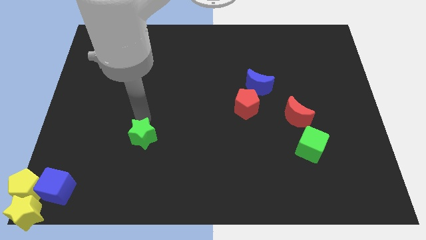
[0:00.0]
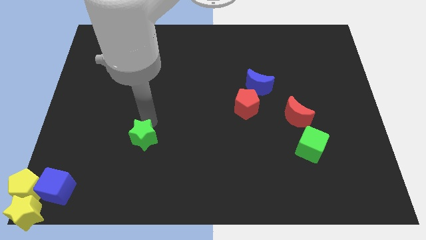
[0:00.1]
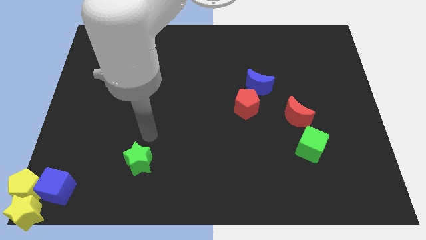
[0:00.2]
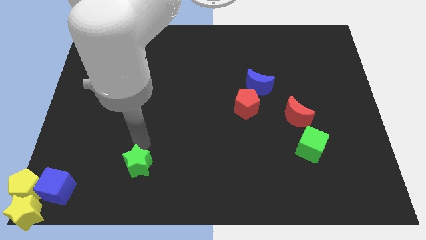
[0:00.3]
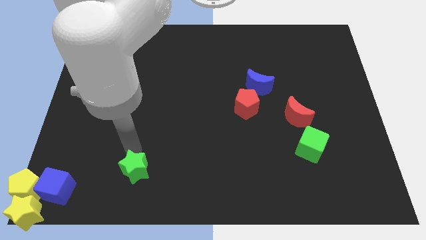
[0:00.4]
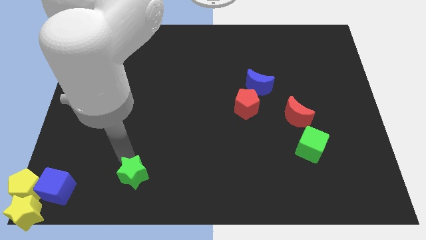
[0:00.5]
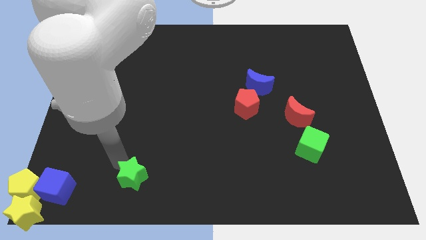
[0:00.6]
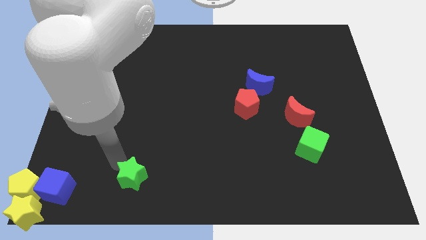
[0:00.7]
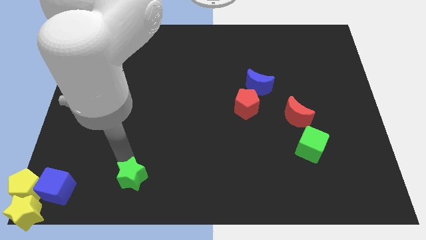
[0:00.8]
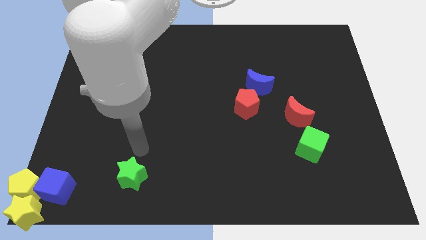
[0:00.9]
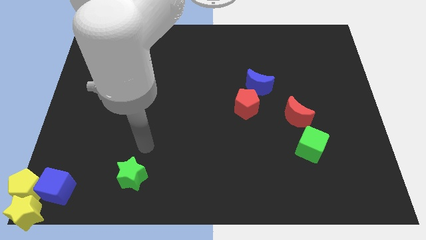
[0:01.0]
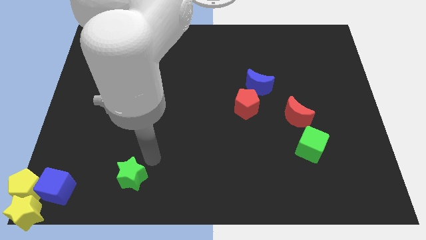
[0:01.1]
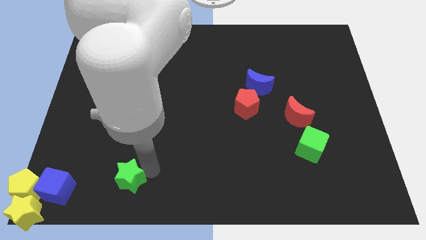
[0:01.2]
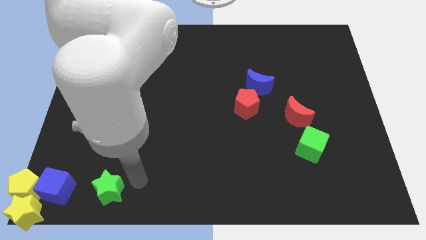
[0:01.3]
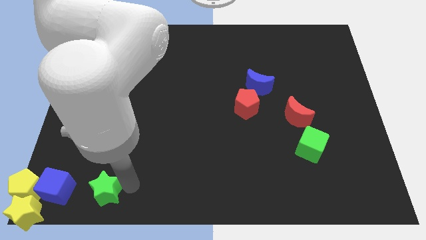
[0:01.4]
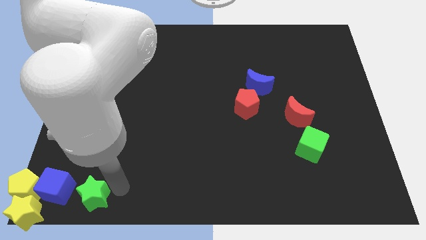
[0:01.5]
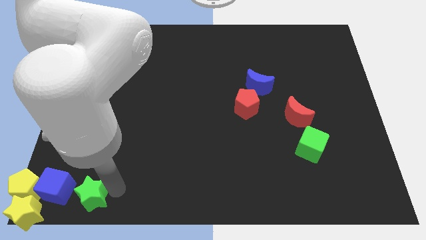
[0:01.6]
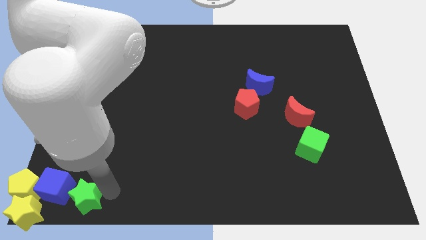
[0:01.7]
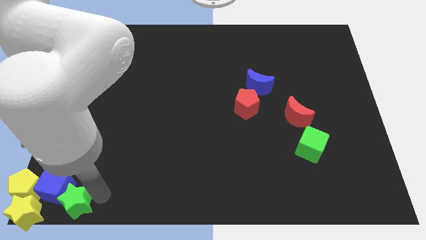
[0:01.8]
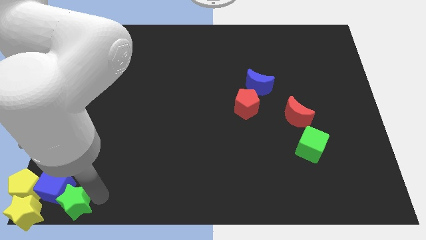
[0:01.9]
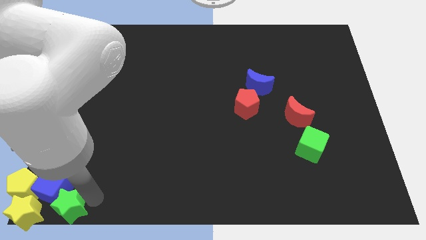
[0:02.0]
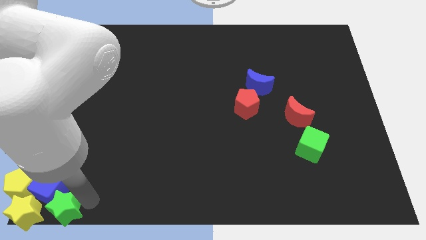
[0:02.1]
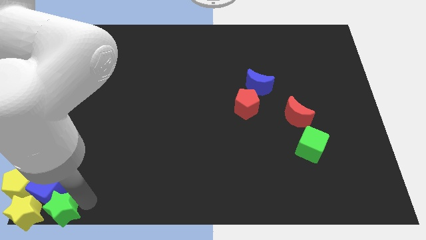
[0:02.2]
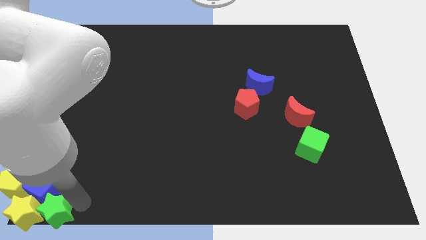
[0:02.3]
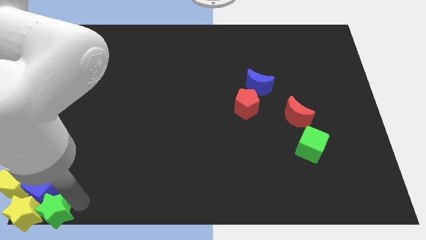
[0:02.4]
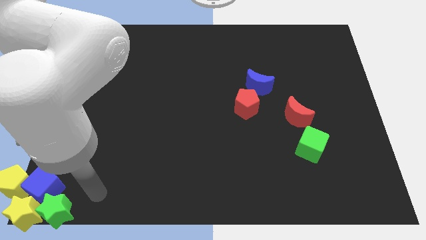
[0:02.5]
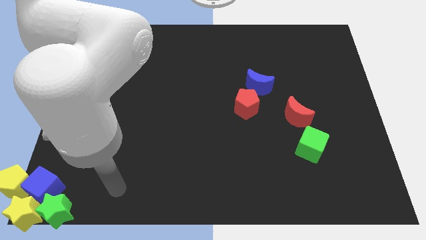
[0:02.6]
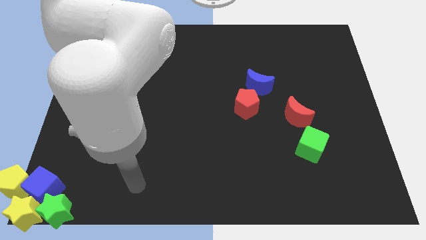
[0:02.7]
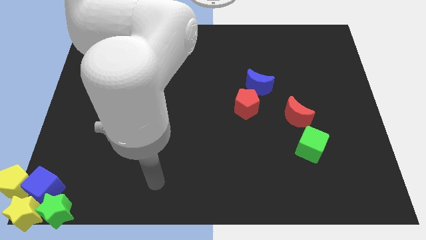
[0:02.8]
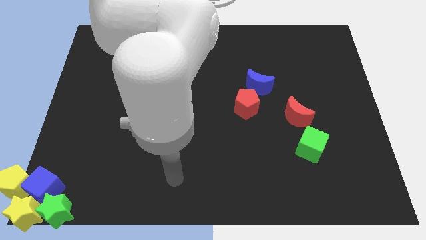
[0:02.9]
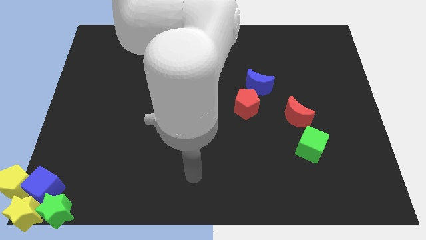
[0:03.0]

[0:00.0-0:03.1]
slide green star to the right of yellow star

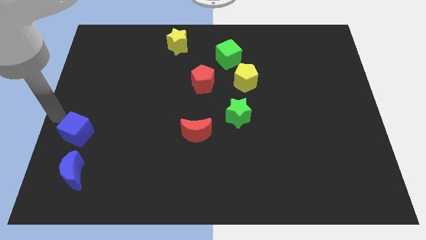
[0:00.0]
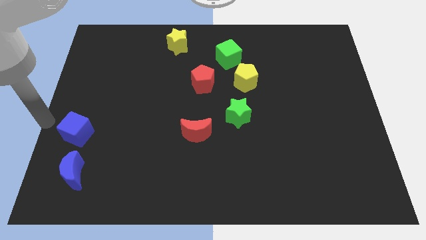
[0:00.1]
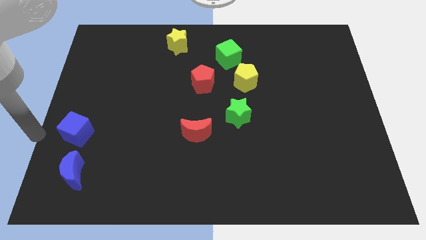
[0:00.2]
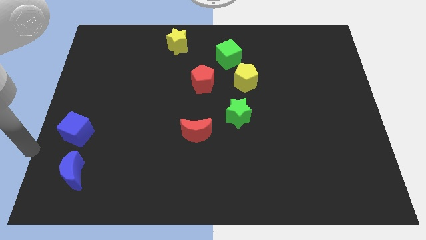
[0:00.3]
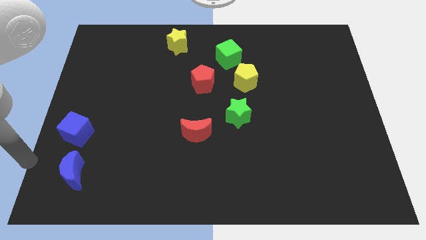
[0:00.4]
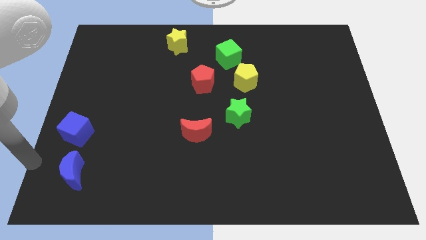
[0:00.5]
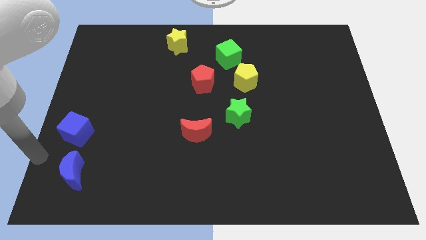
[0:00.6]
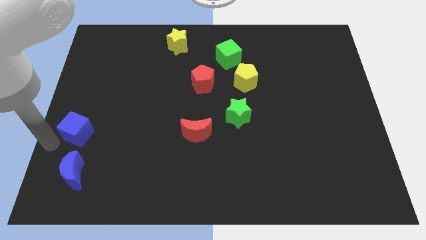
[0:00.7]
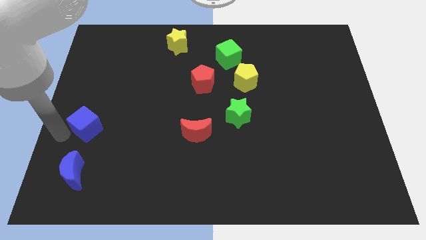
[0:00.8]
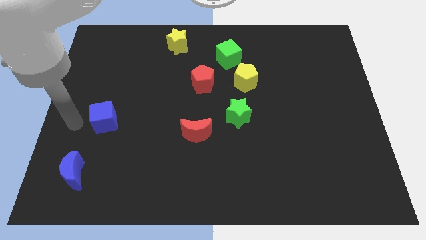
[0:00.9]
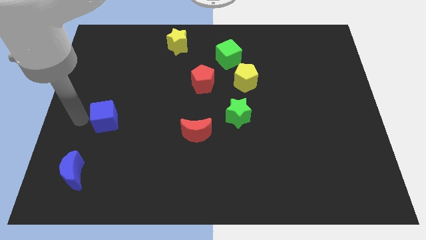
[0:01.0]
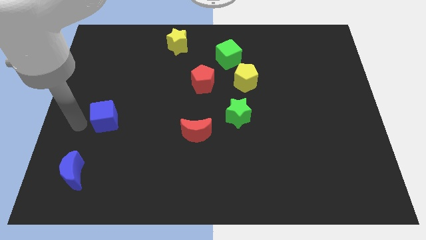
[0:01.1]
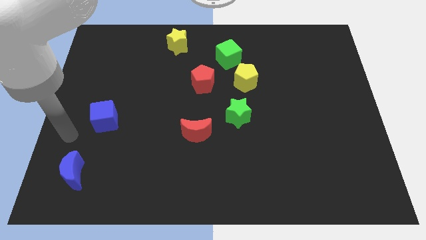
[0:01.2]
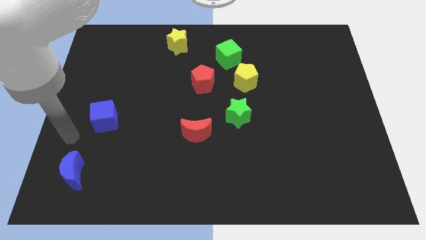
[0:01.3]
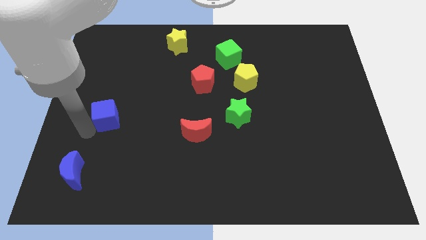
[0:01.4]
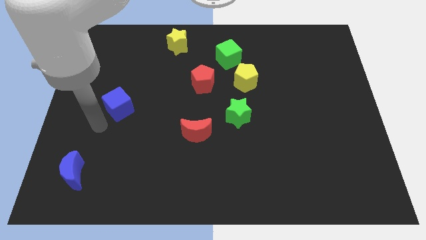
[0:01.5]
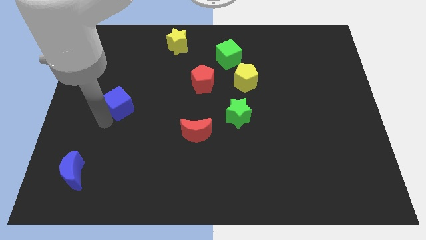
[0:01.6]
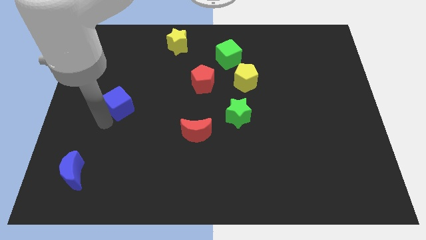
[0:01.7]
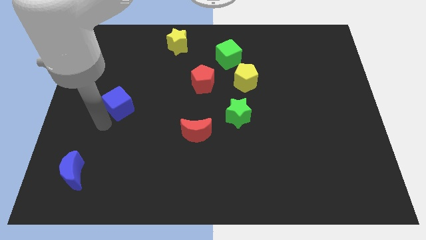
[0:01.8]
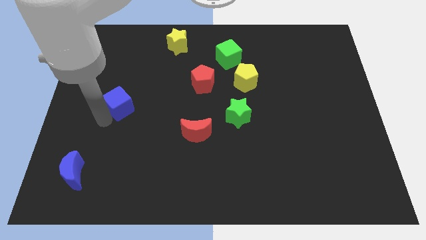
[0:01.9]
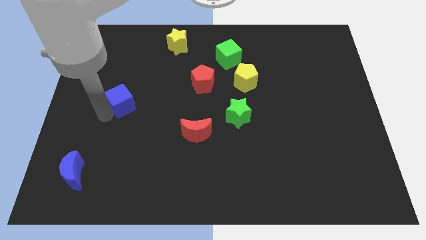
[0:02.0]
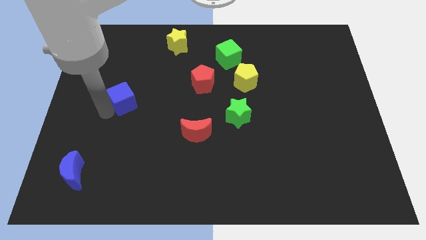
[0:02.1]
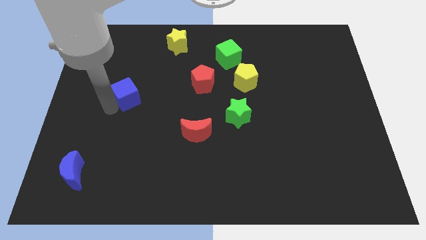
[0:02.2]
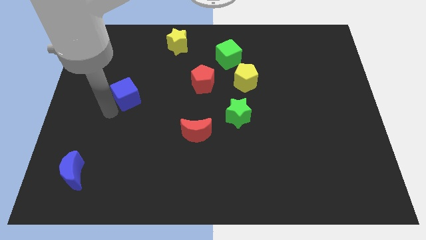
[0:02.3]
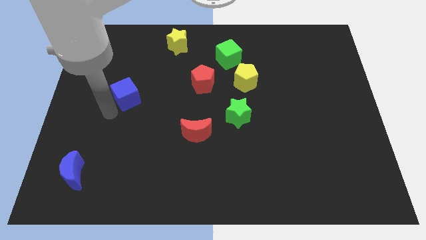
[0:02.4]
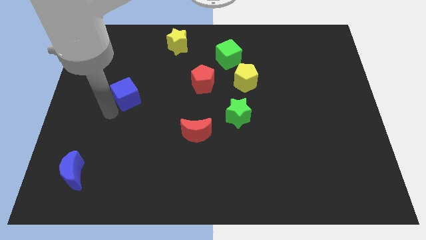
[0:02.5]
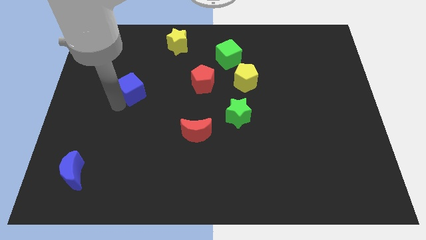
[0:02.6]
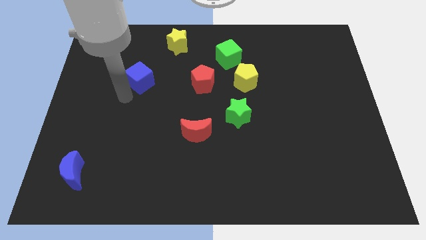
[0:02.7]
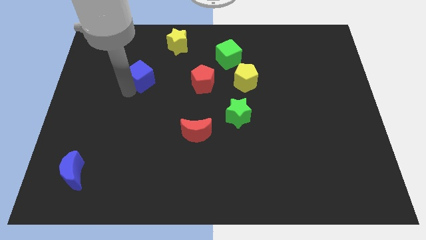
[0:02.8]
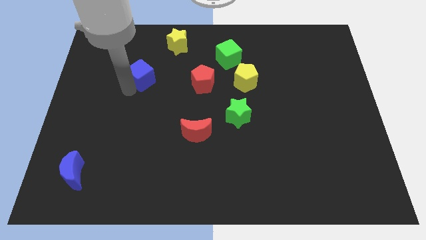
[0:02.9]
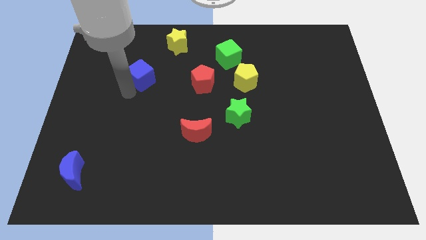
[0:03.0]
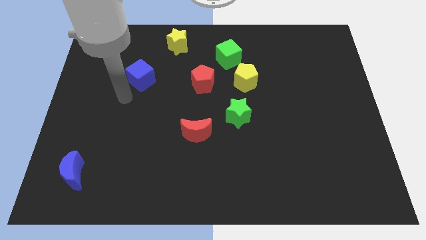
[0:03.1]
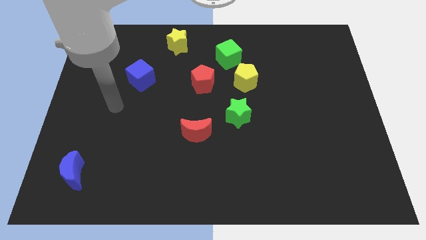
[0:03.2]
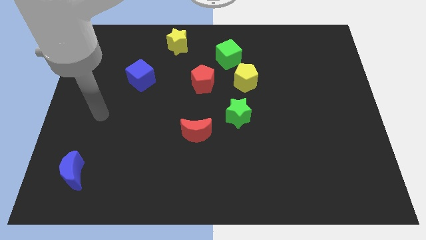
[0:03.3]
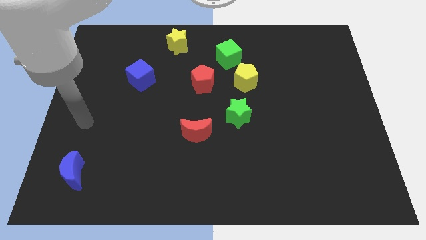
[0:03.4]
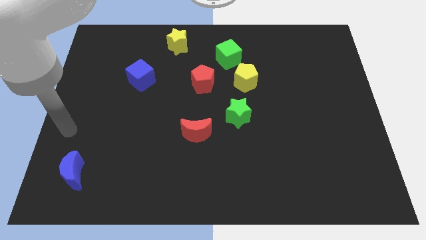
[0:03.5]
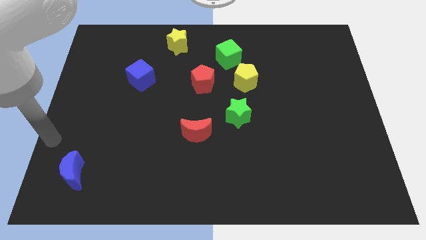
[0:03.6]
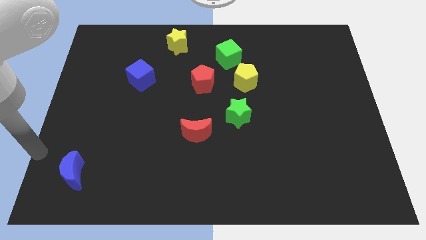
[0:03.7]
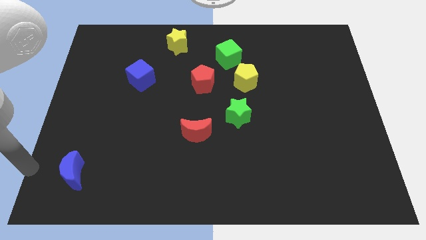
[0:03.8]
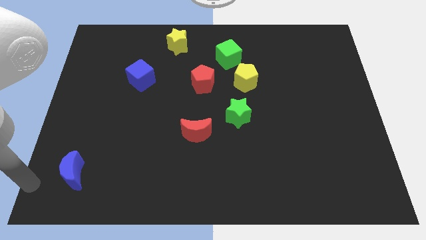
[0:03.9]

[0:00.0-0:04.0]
place the blue cube parallel to the left of the yellow star

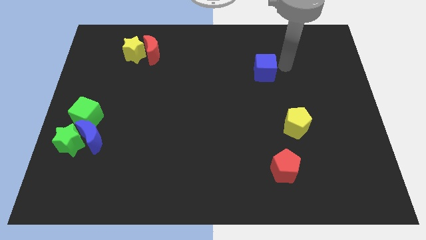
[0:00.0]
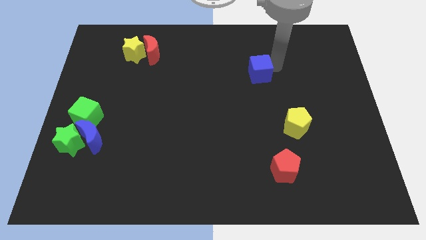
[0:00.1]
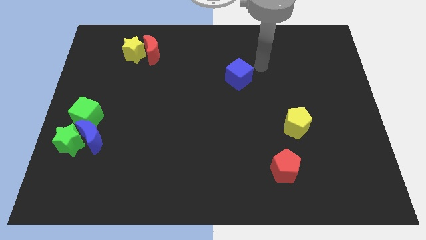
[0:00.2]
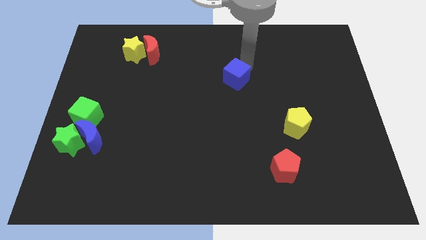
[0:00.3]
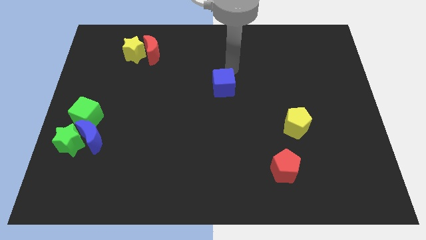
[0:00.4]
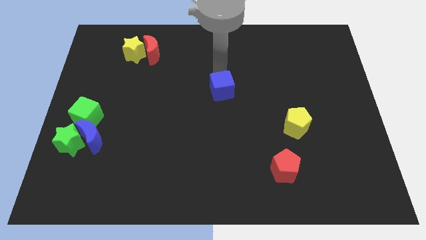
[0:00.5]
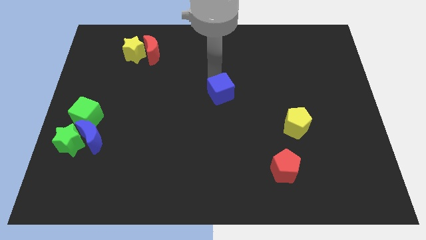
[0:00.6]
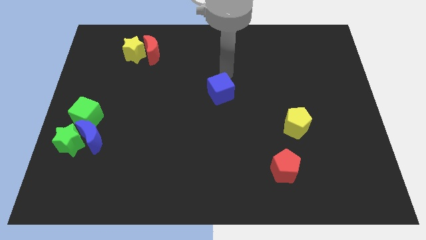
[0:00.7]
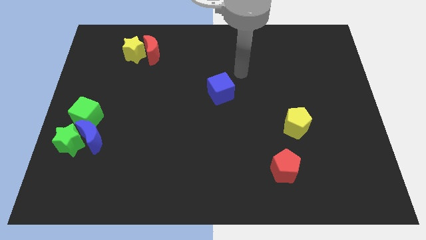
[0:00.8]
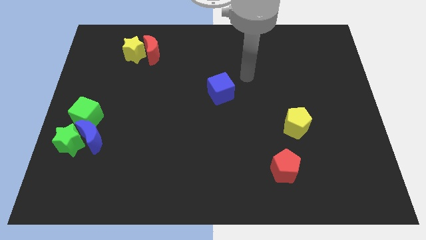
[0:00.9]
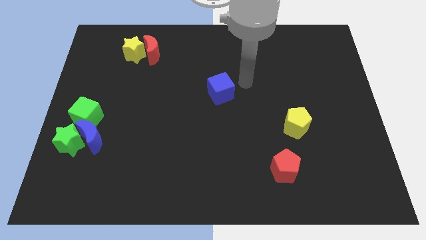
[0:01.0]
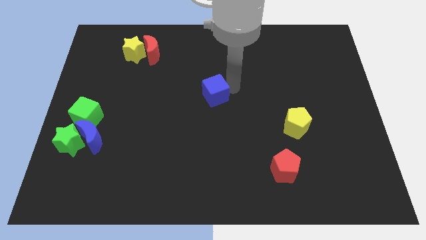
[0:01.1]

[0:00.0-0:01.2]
place the blue cube at the center of the board

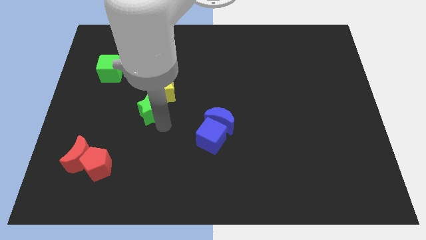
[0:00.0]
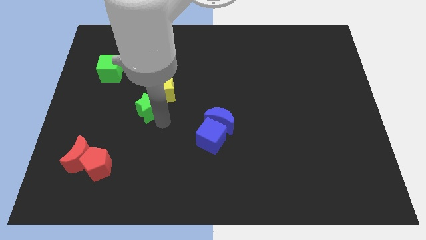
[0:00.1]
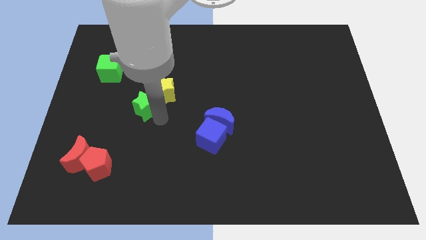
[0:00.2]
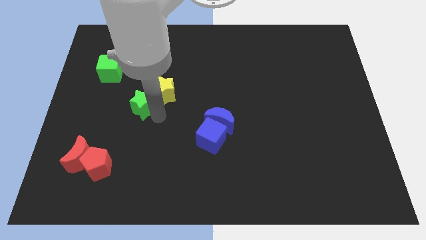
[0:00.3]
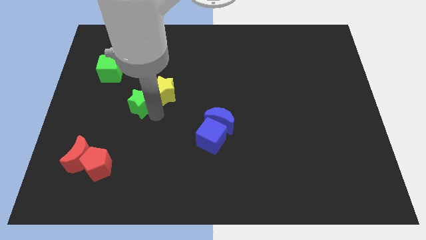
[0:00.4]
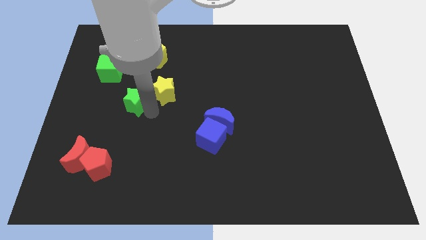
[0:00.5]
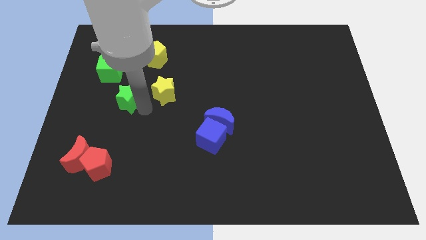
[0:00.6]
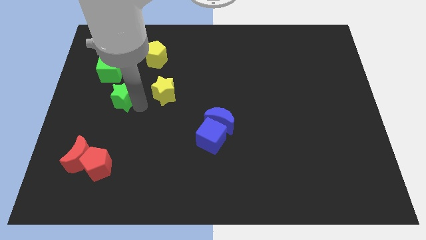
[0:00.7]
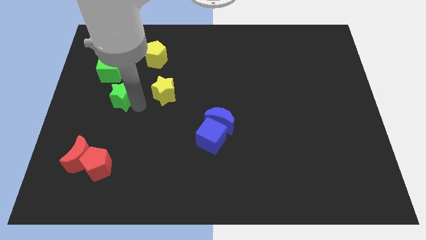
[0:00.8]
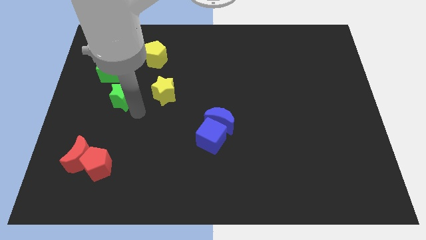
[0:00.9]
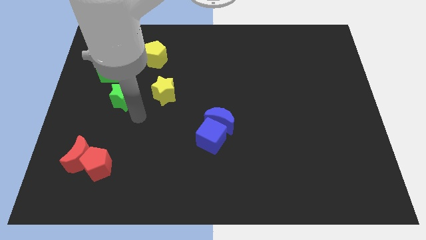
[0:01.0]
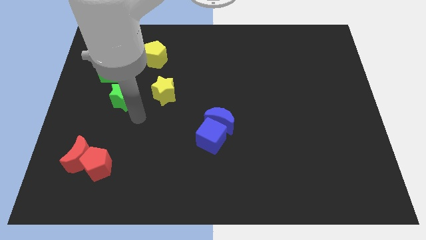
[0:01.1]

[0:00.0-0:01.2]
move the green star away from the the yellow star
